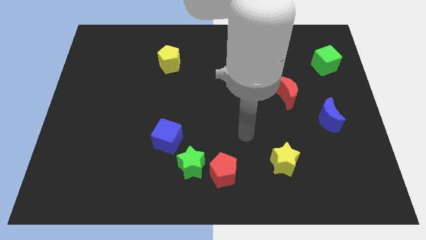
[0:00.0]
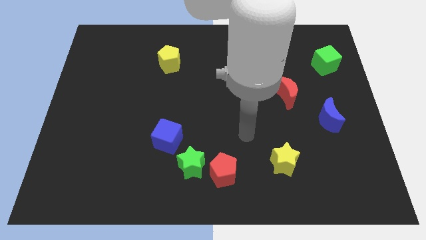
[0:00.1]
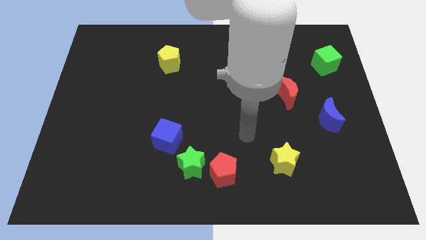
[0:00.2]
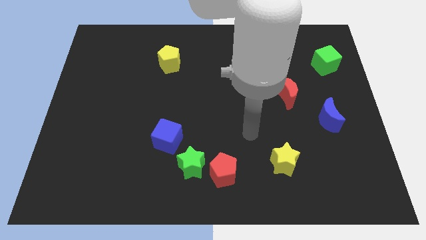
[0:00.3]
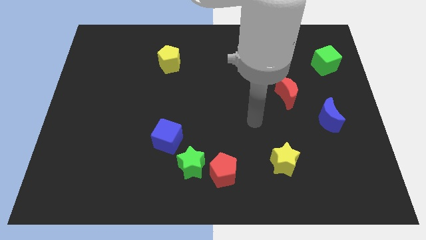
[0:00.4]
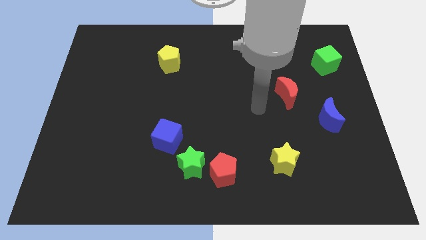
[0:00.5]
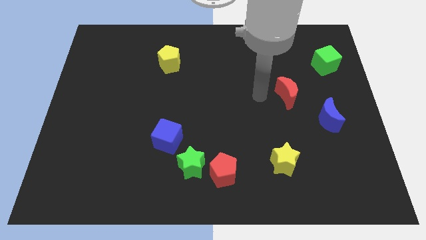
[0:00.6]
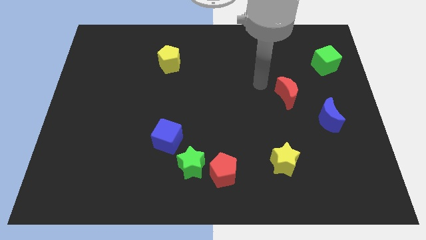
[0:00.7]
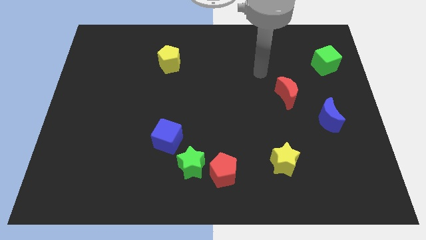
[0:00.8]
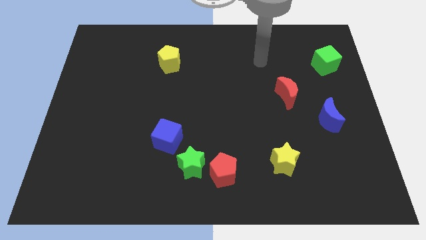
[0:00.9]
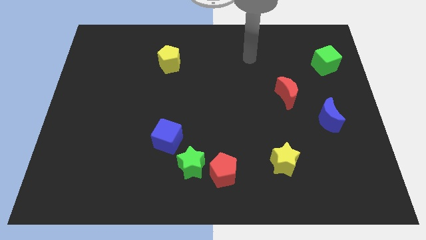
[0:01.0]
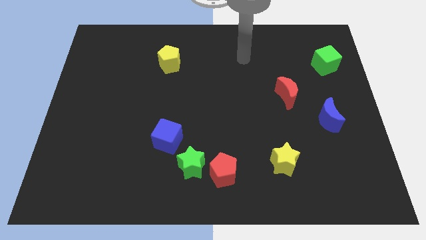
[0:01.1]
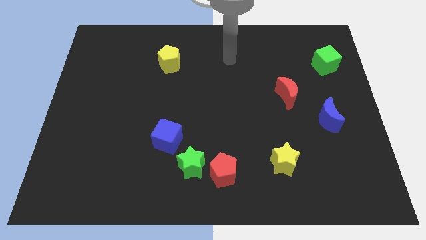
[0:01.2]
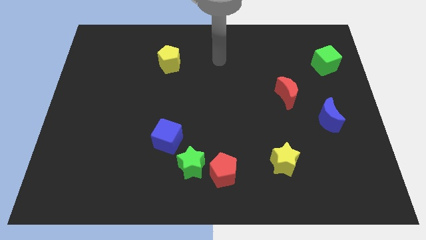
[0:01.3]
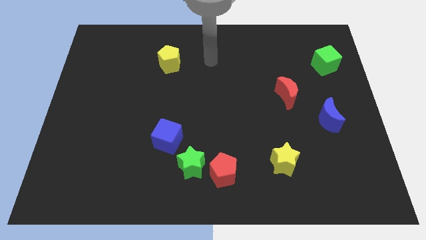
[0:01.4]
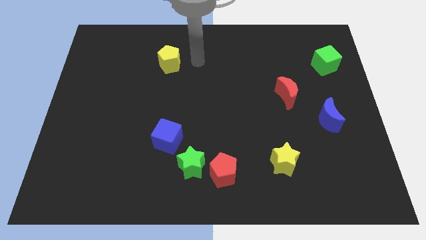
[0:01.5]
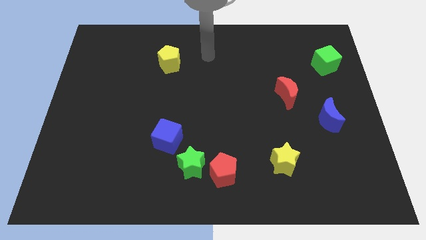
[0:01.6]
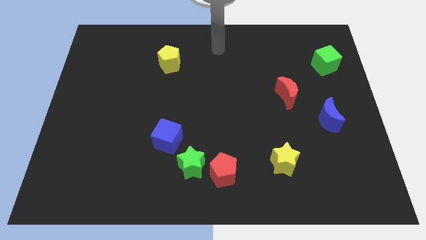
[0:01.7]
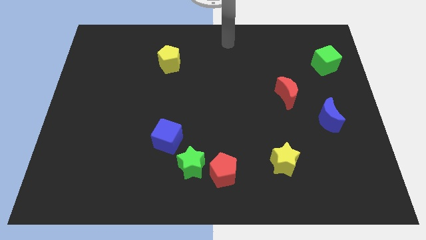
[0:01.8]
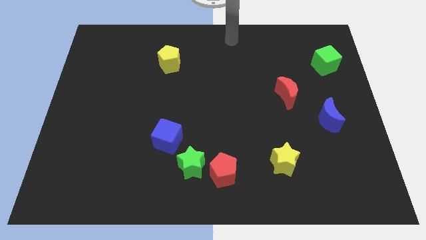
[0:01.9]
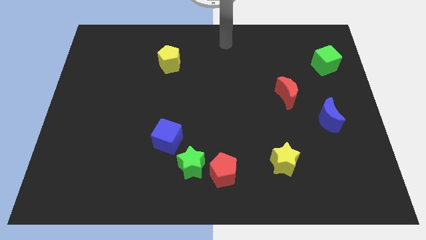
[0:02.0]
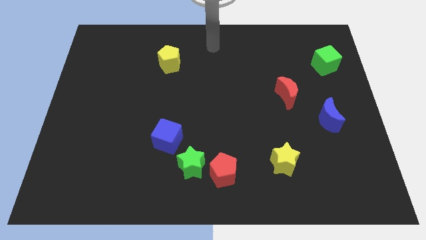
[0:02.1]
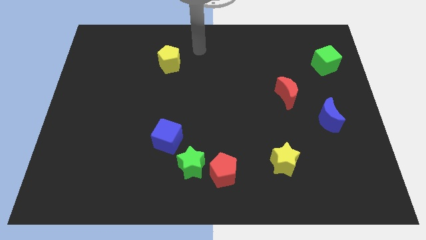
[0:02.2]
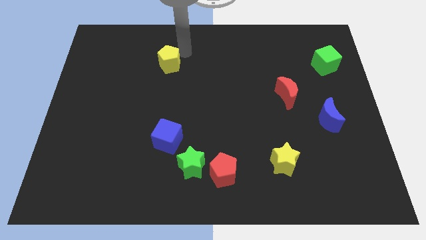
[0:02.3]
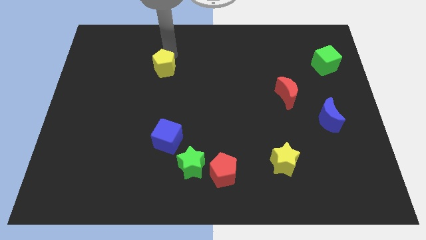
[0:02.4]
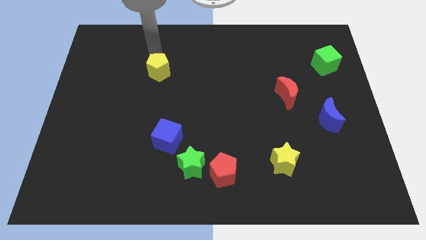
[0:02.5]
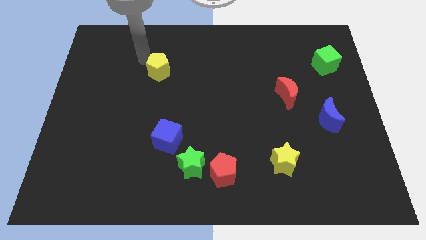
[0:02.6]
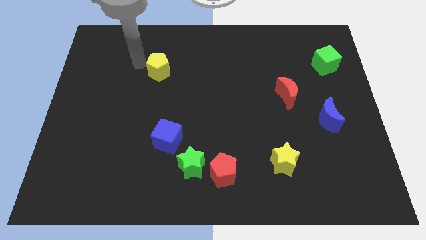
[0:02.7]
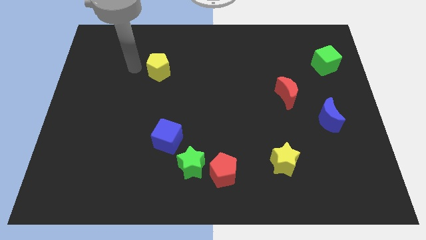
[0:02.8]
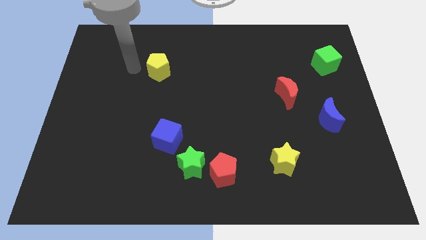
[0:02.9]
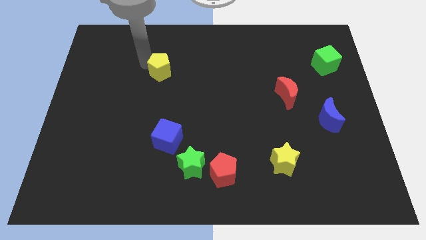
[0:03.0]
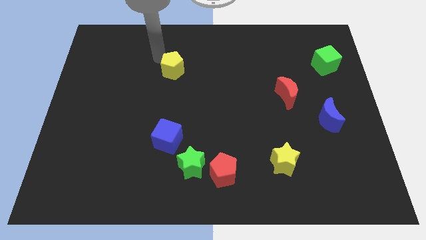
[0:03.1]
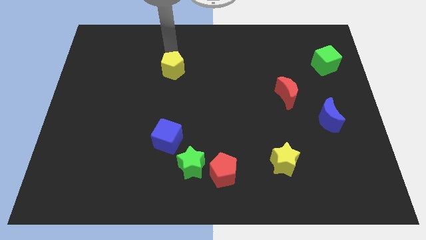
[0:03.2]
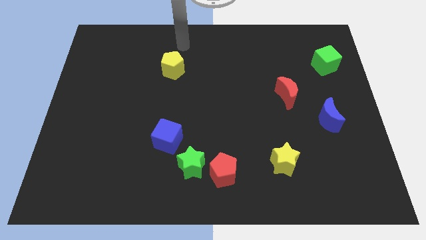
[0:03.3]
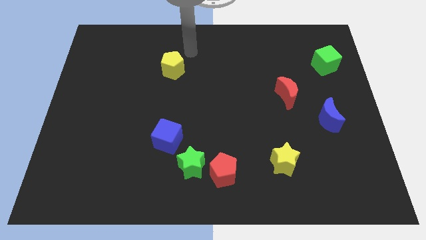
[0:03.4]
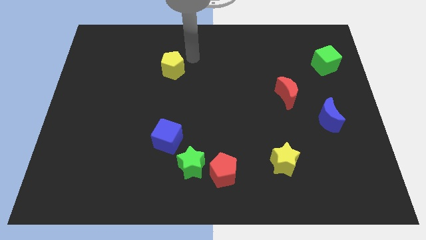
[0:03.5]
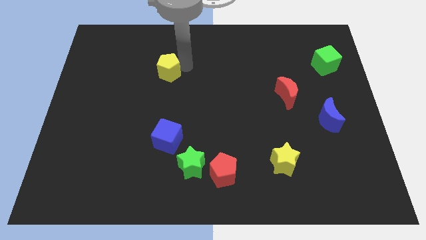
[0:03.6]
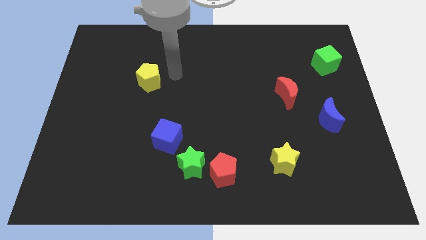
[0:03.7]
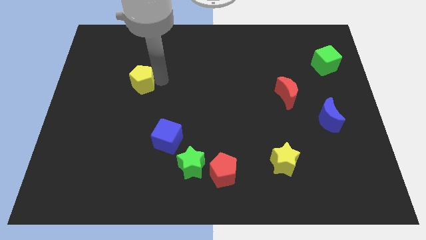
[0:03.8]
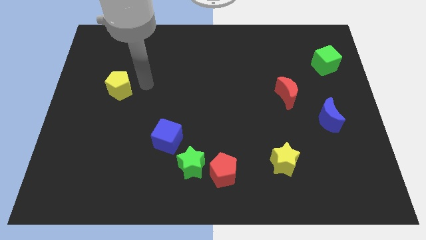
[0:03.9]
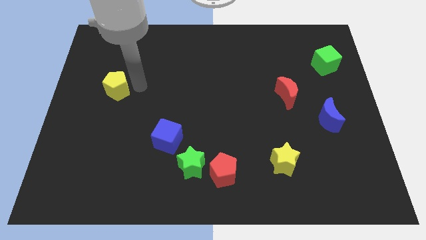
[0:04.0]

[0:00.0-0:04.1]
push the yellow pentagon towards the left side of the board

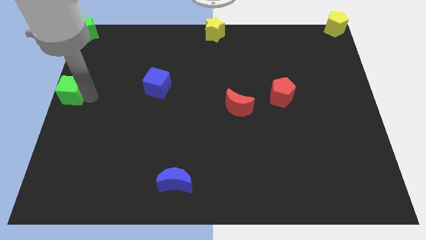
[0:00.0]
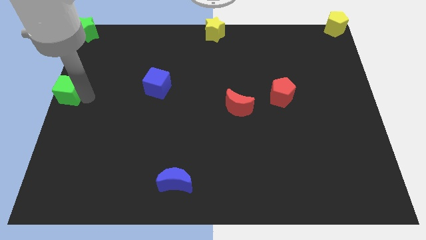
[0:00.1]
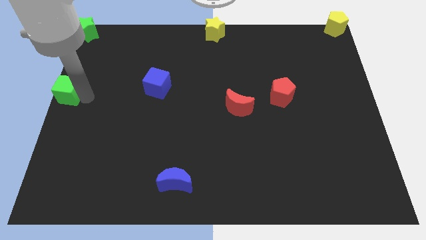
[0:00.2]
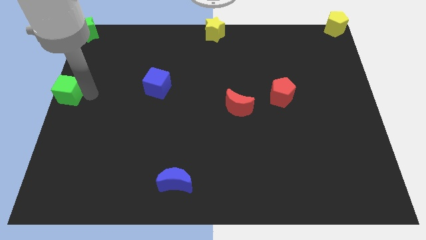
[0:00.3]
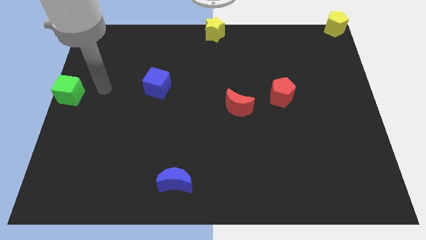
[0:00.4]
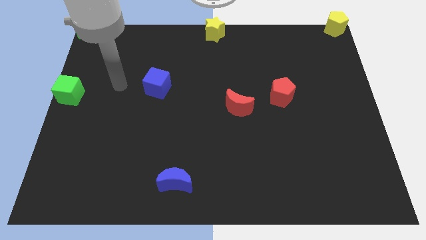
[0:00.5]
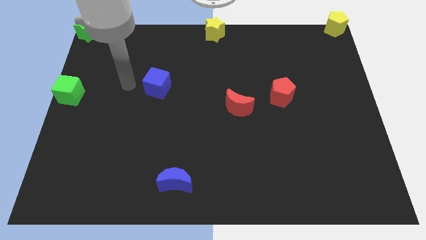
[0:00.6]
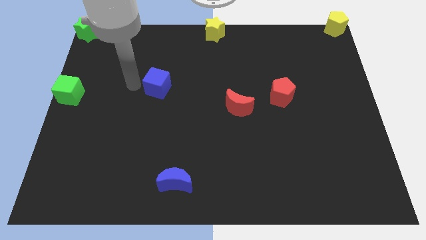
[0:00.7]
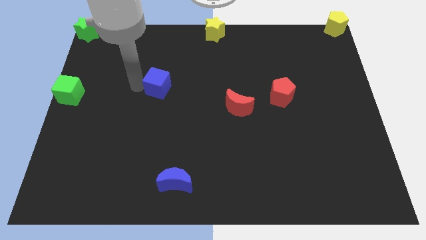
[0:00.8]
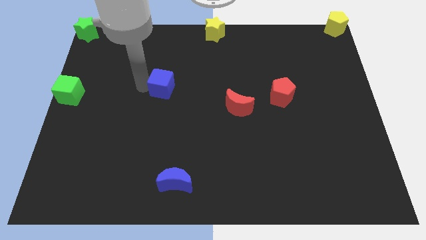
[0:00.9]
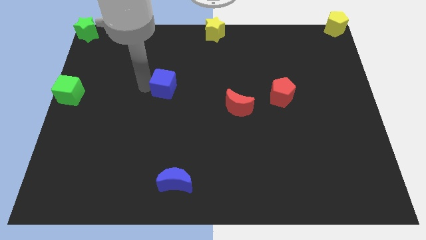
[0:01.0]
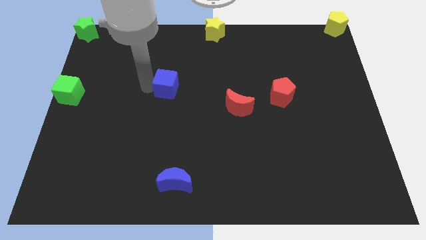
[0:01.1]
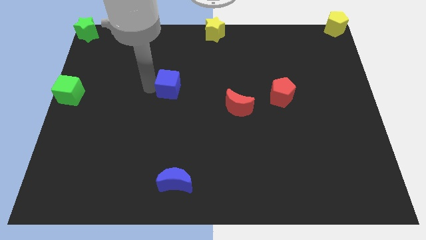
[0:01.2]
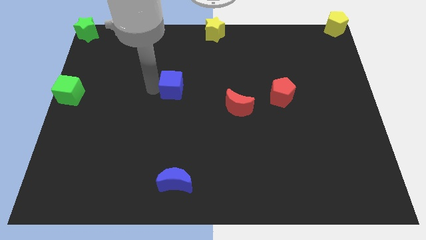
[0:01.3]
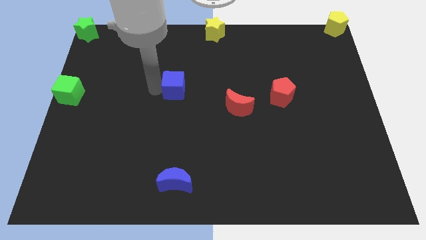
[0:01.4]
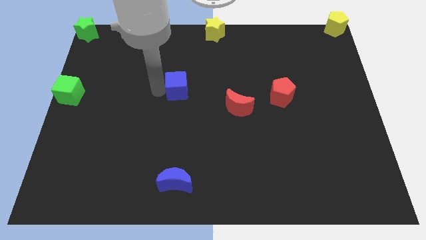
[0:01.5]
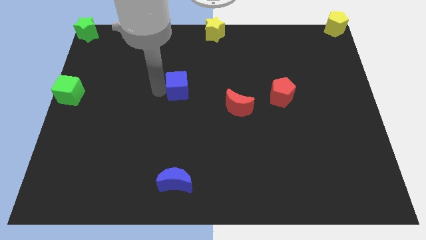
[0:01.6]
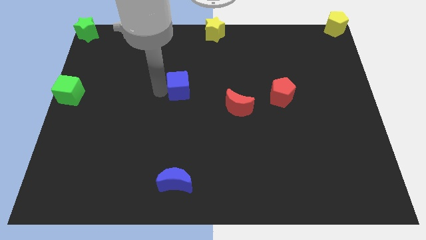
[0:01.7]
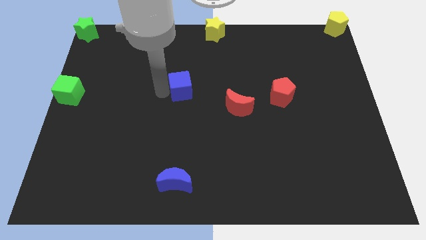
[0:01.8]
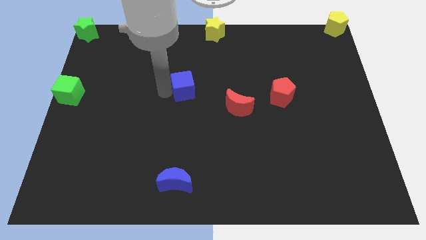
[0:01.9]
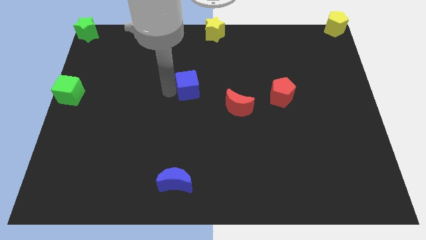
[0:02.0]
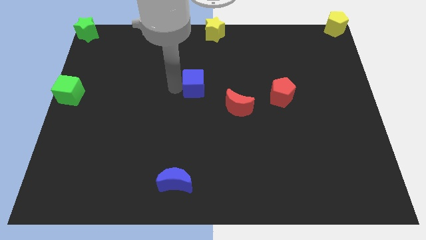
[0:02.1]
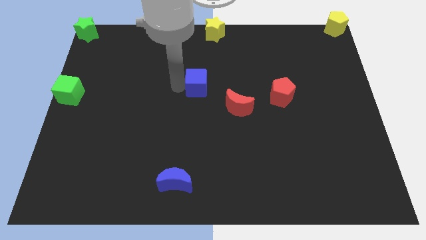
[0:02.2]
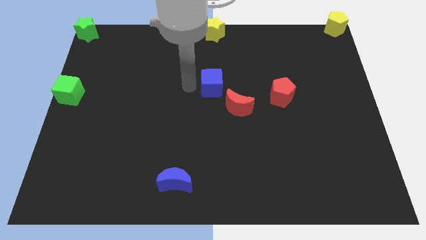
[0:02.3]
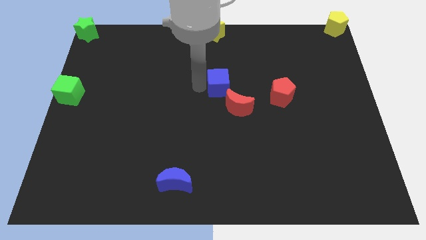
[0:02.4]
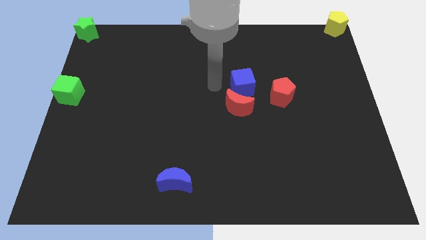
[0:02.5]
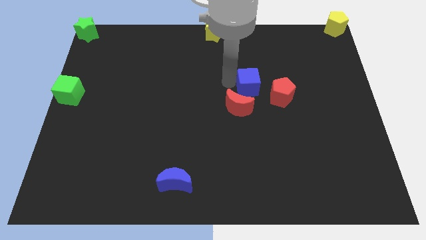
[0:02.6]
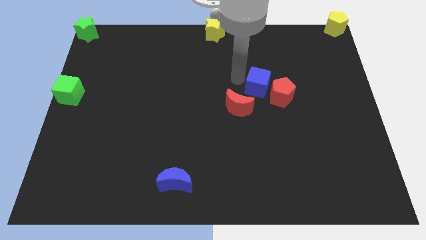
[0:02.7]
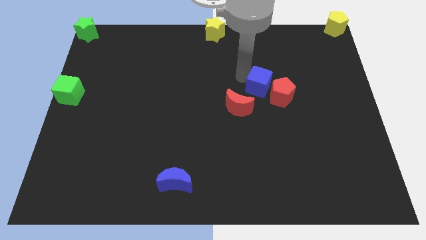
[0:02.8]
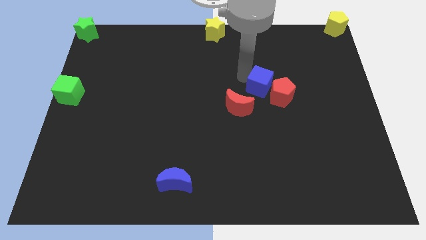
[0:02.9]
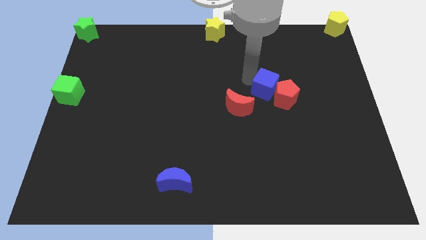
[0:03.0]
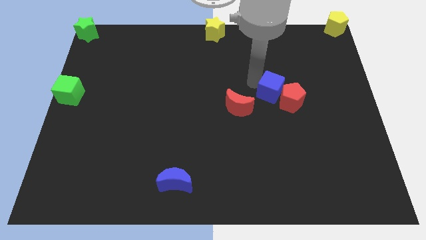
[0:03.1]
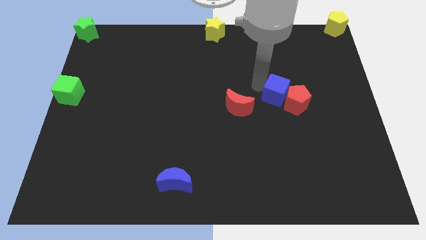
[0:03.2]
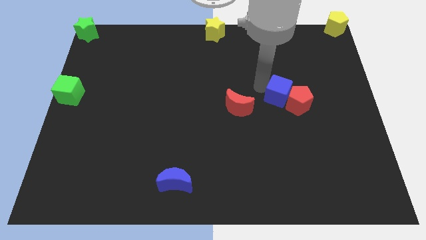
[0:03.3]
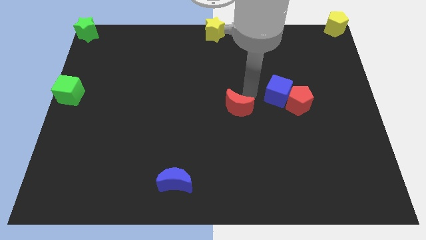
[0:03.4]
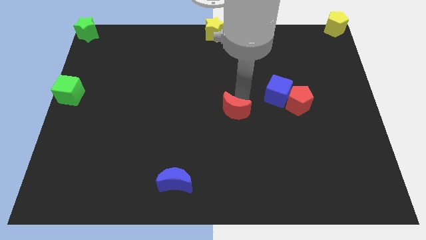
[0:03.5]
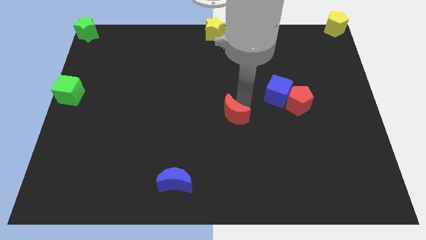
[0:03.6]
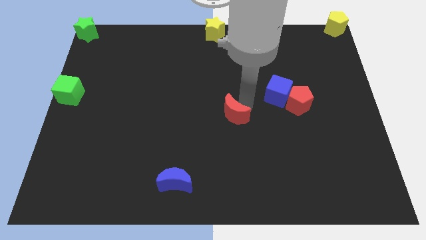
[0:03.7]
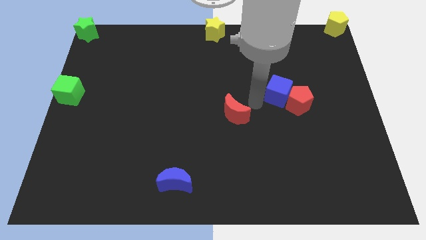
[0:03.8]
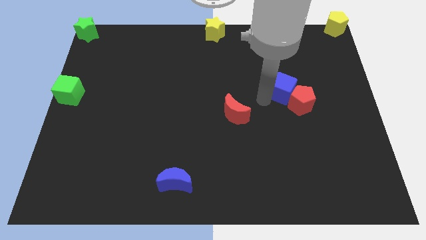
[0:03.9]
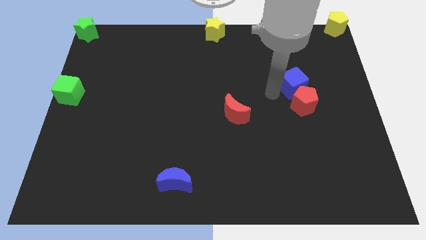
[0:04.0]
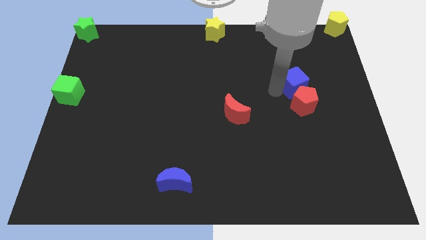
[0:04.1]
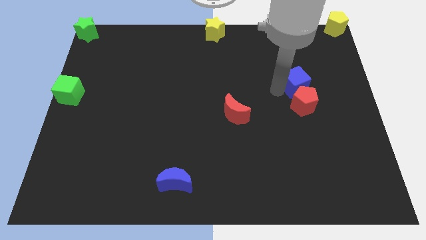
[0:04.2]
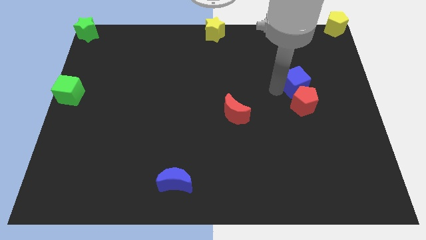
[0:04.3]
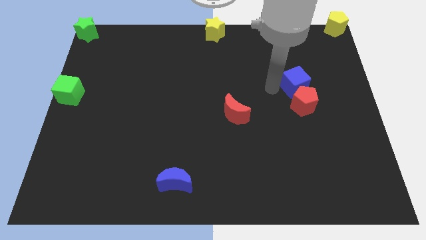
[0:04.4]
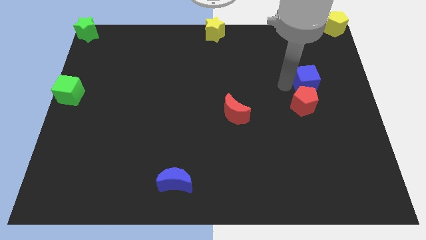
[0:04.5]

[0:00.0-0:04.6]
move blue cube into red pentagon

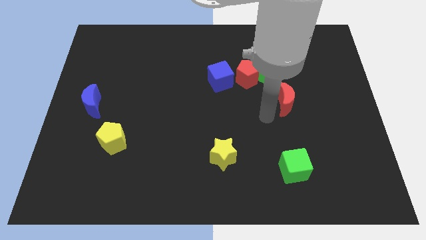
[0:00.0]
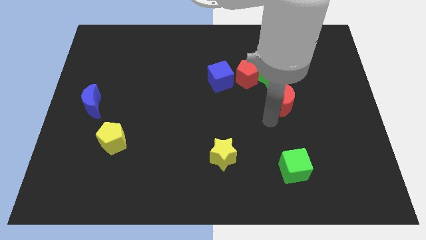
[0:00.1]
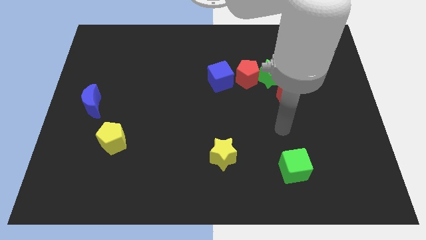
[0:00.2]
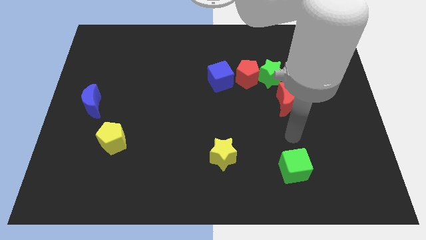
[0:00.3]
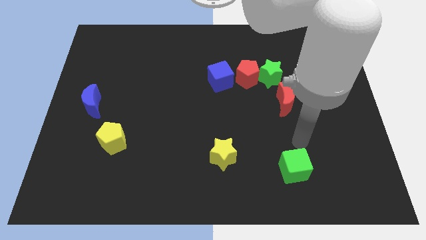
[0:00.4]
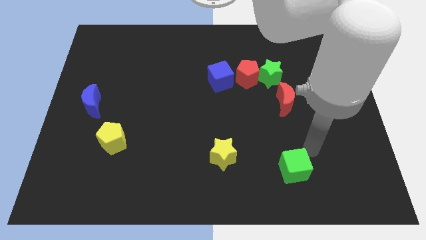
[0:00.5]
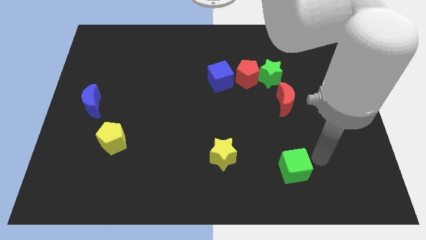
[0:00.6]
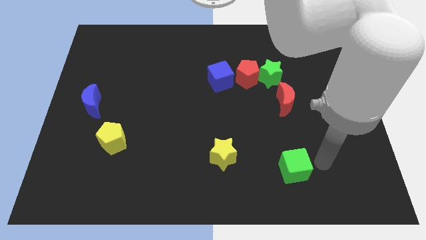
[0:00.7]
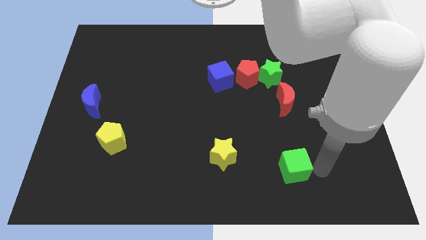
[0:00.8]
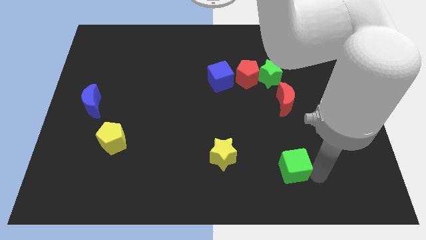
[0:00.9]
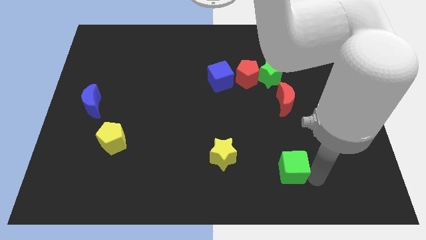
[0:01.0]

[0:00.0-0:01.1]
move your hand towards the green cube
